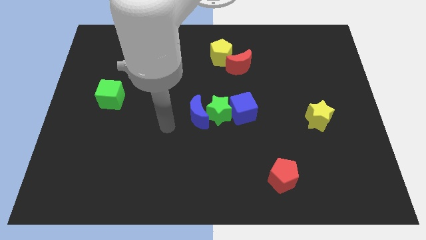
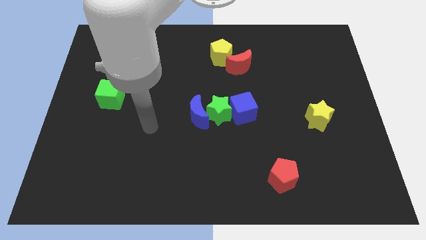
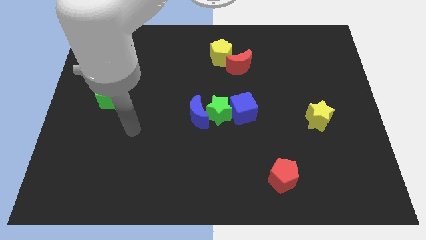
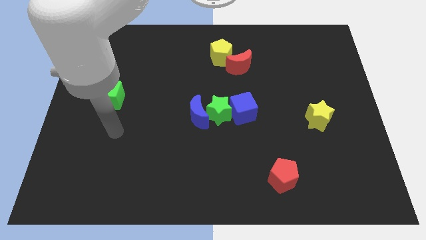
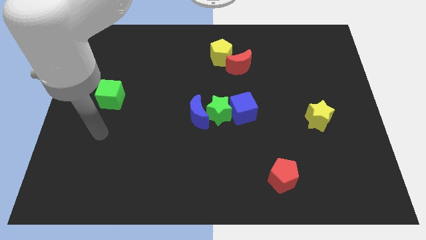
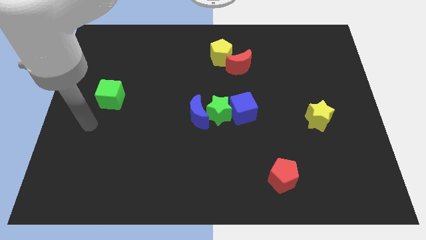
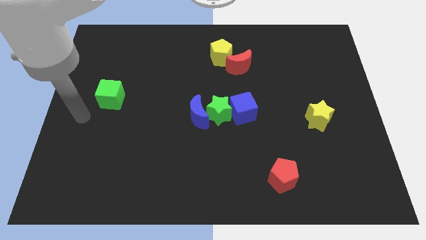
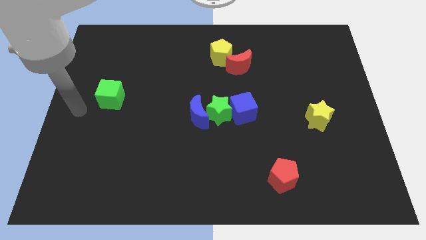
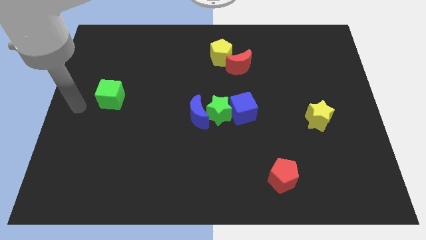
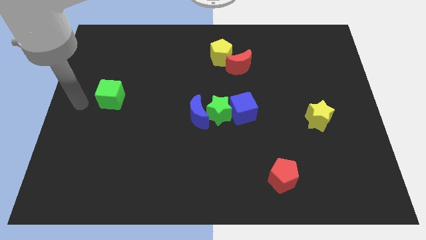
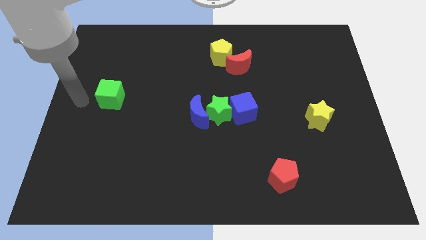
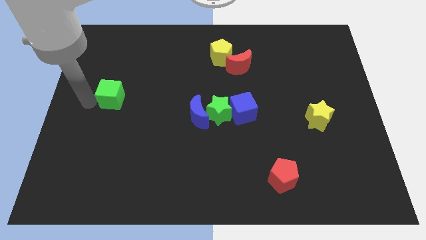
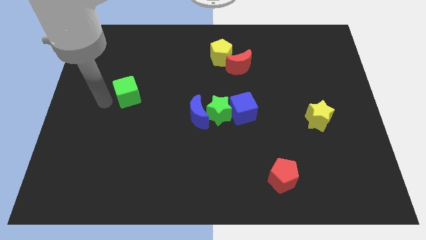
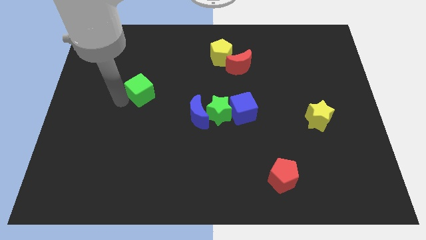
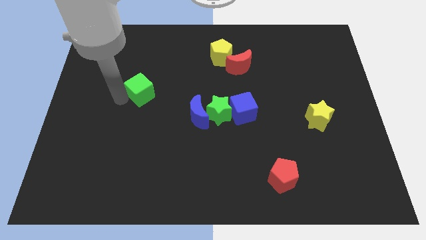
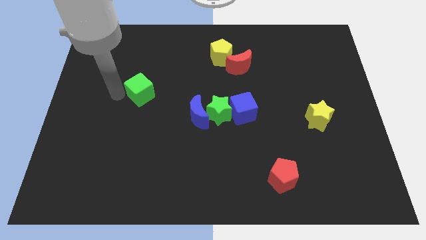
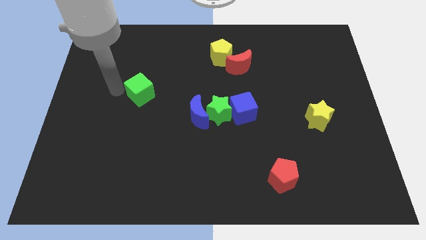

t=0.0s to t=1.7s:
move the green cube towards the blue moon

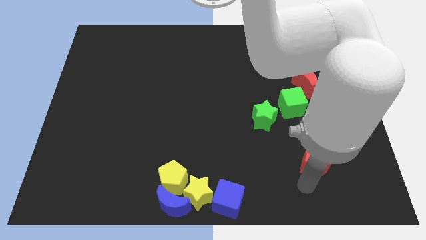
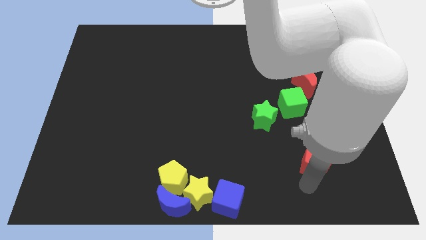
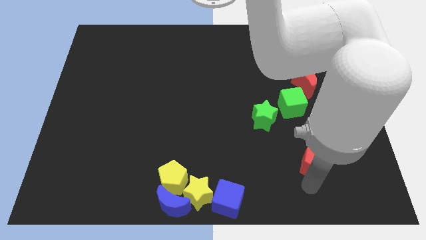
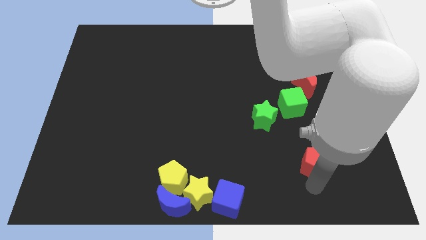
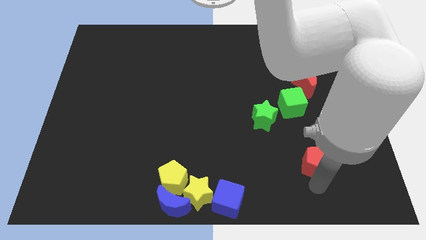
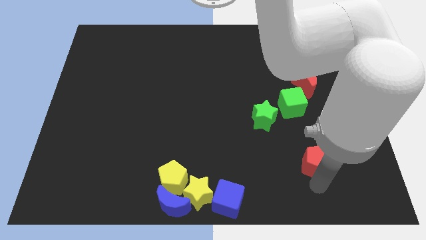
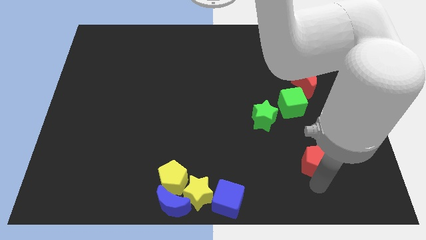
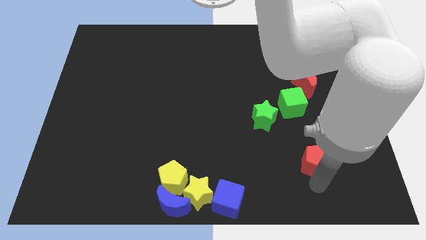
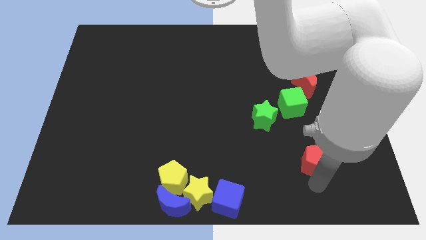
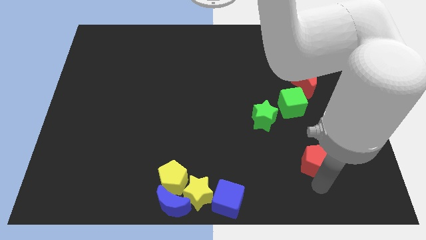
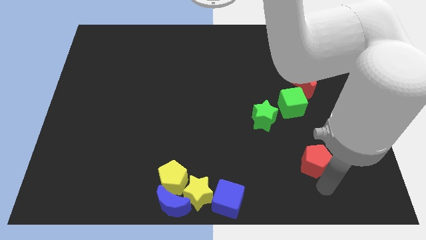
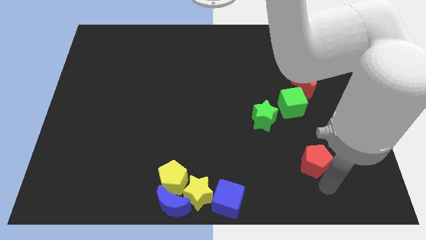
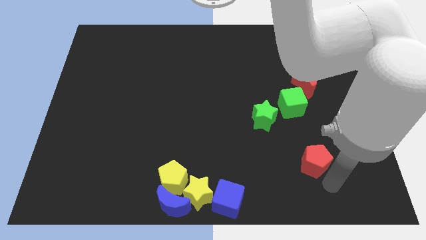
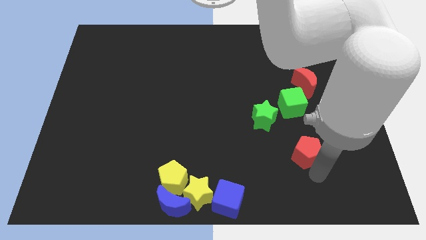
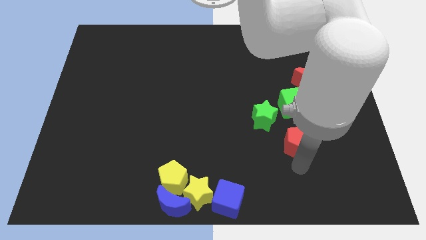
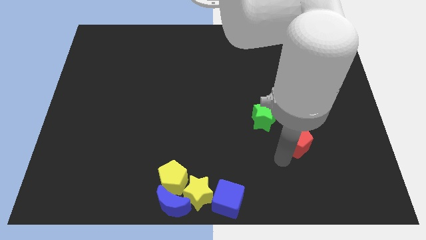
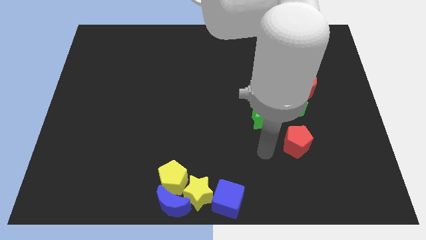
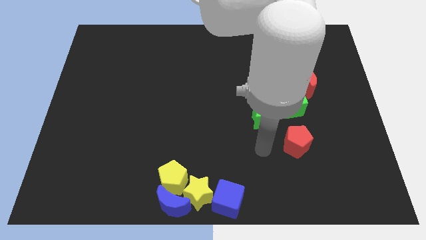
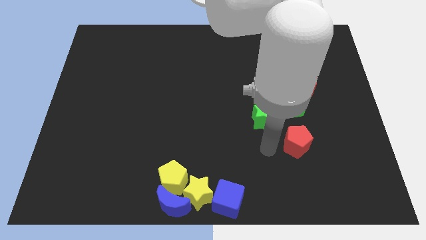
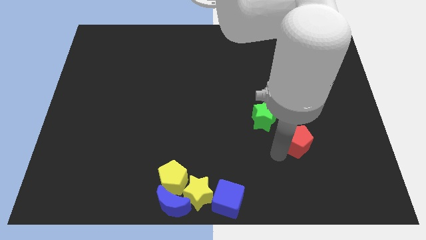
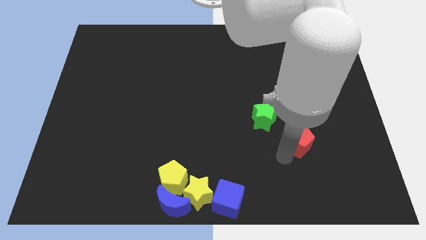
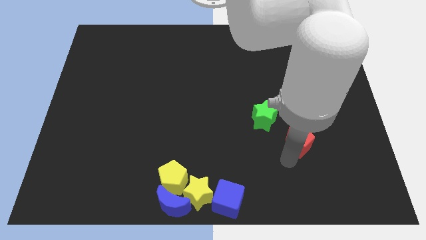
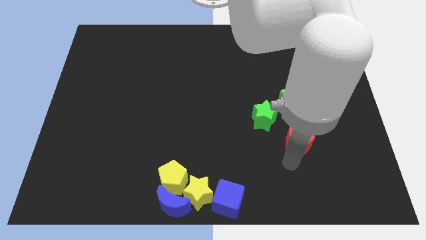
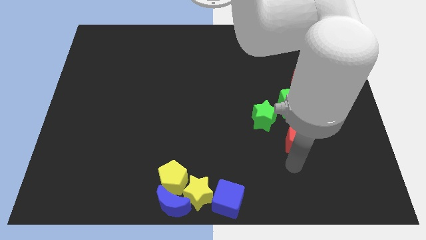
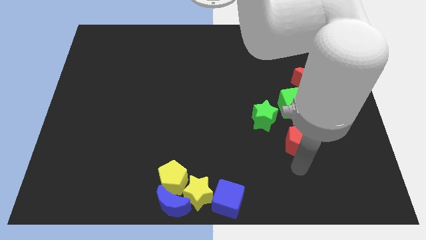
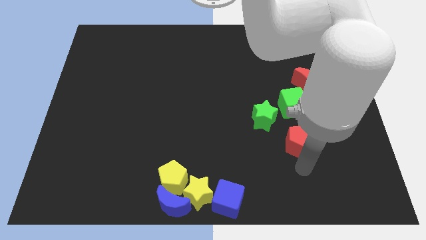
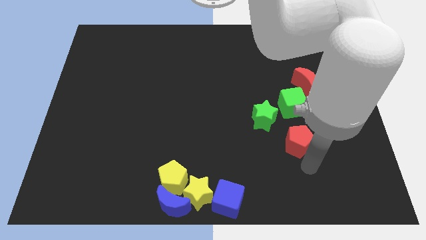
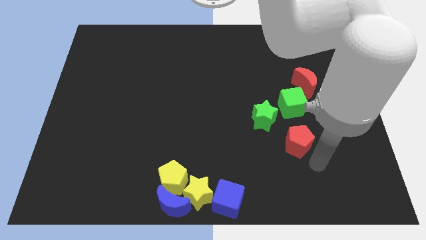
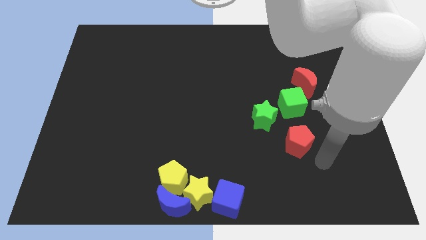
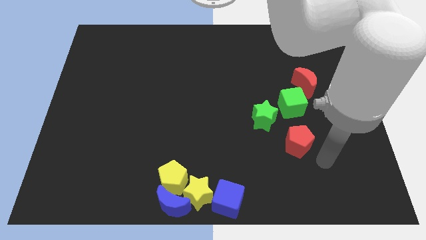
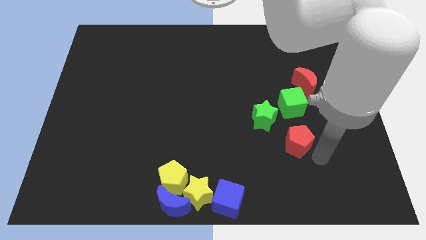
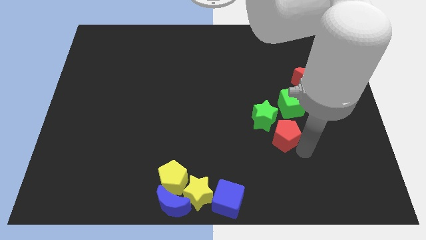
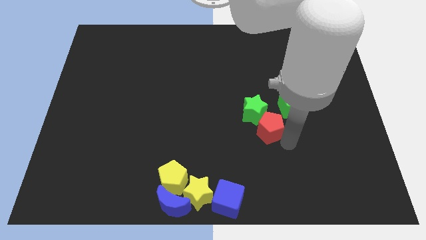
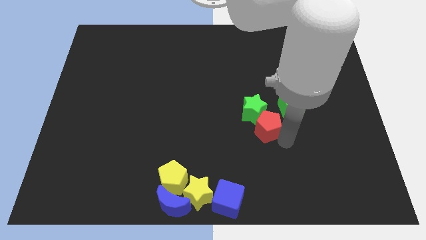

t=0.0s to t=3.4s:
push red pentagon into the green star

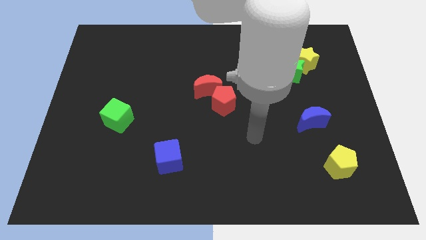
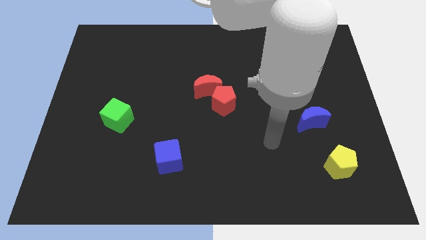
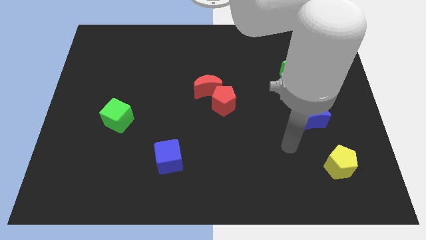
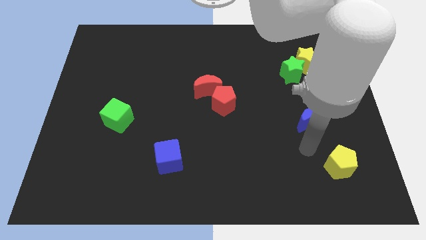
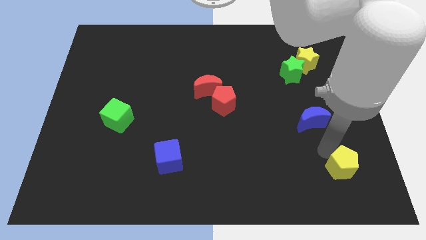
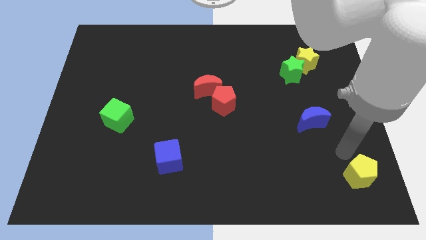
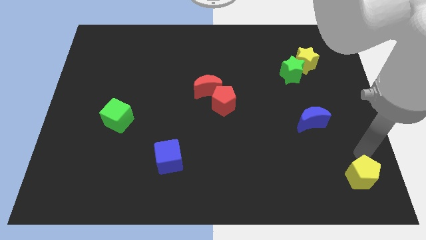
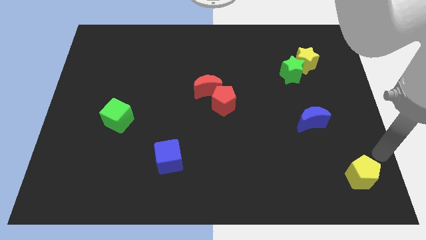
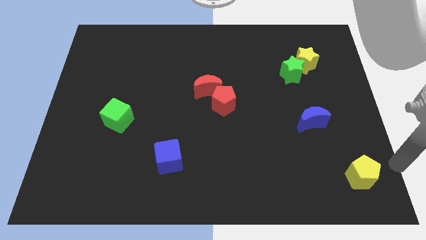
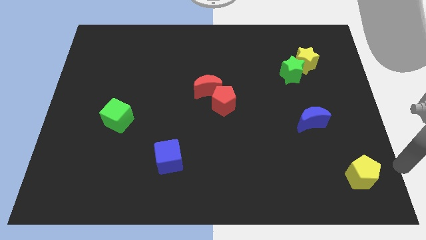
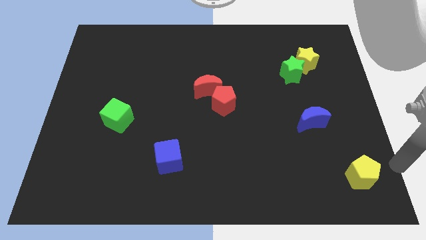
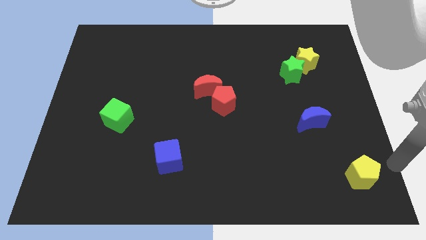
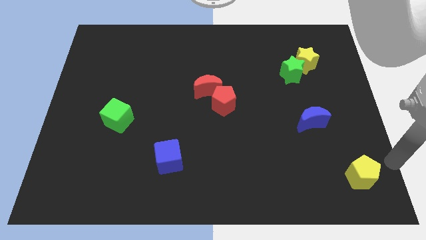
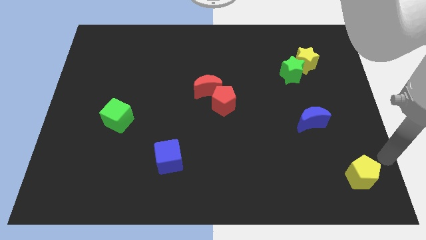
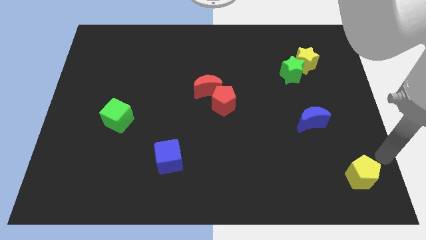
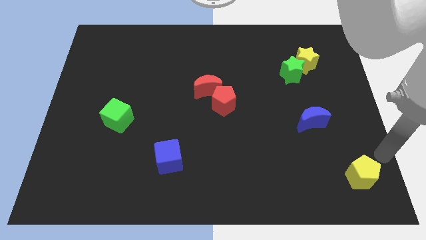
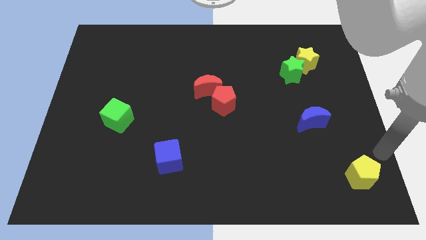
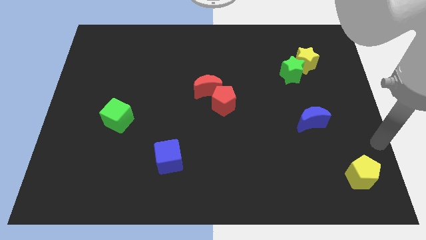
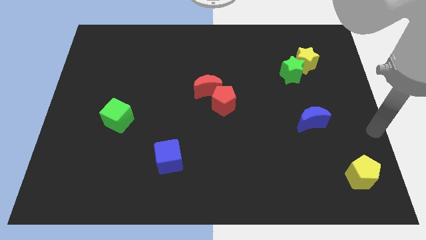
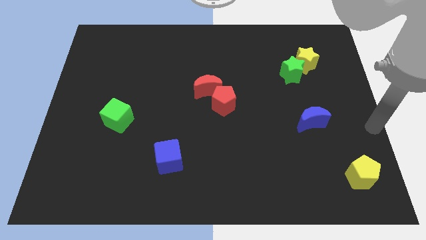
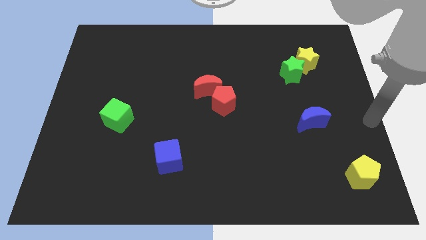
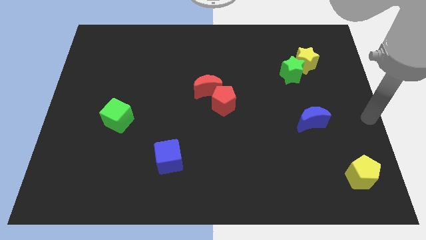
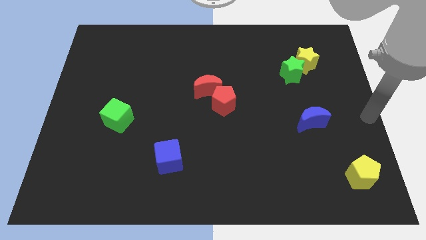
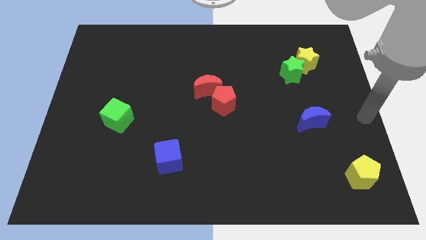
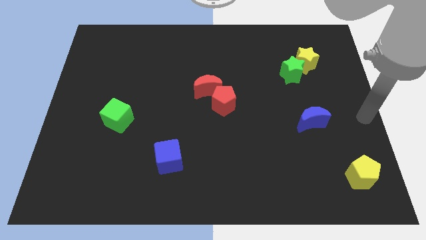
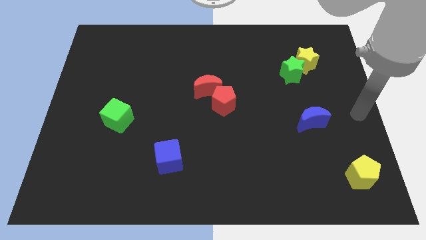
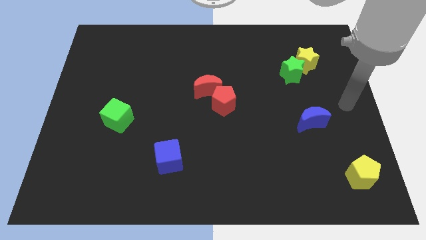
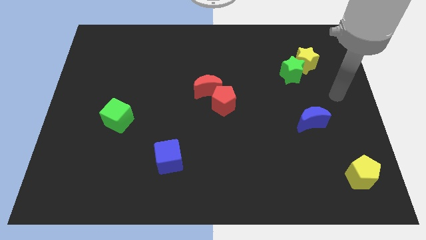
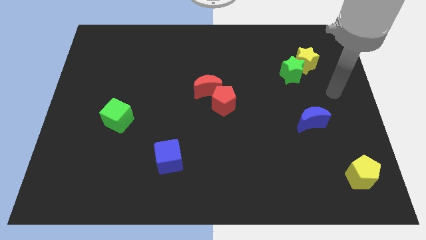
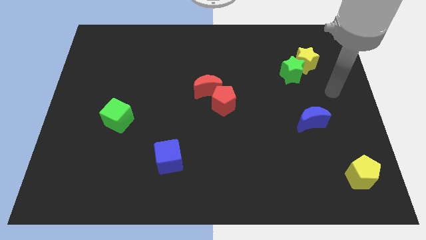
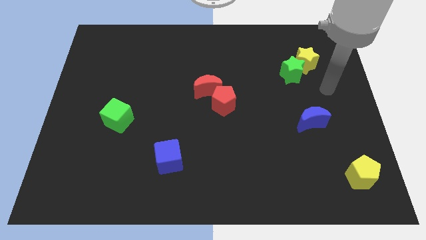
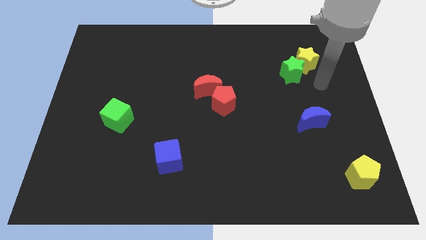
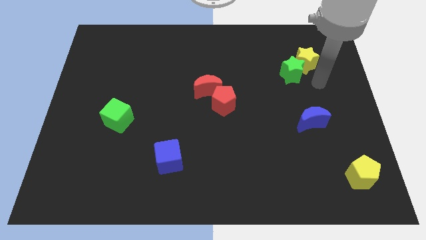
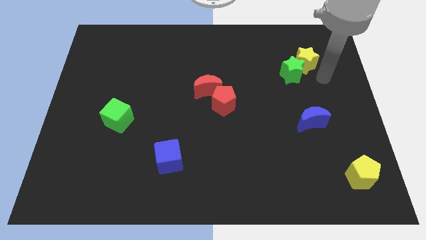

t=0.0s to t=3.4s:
move yellow pentagon slightly to the right

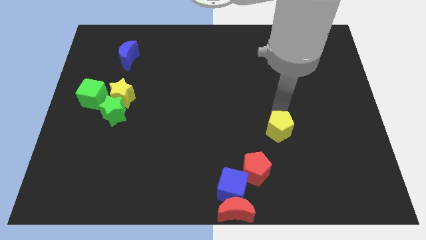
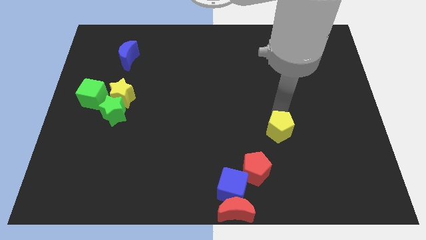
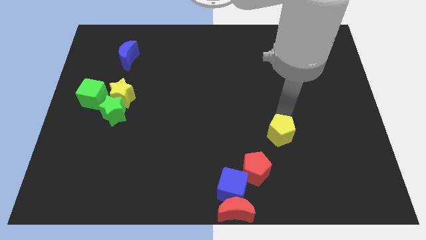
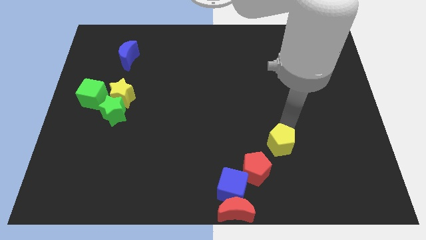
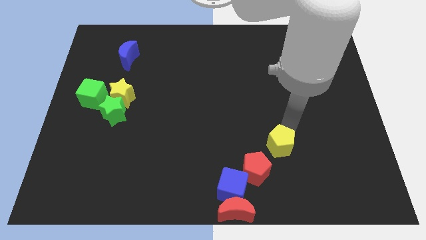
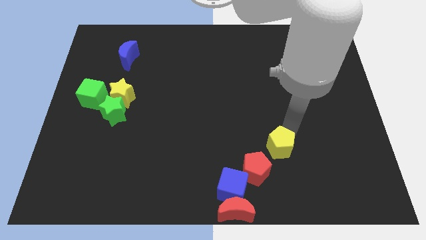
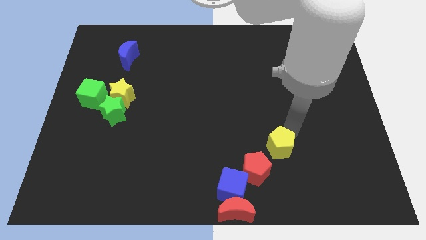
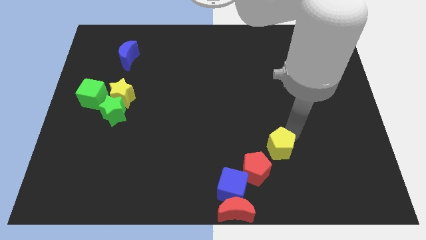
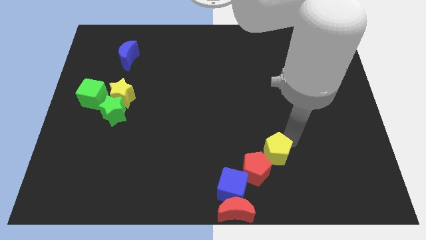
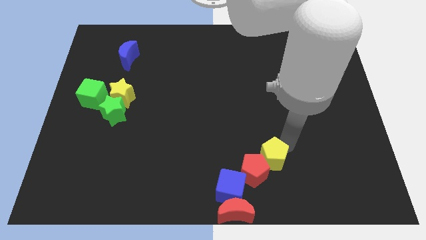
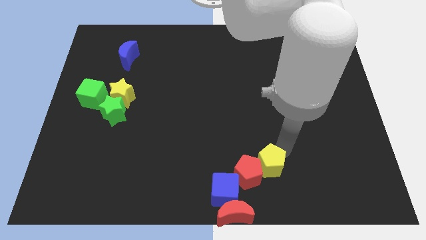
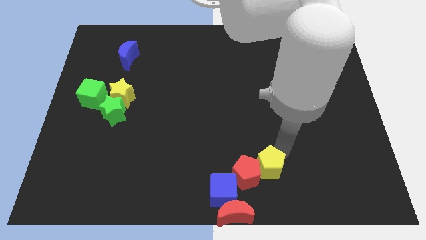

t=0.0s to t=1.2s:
push the yellow pentagon into the red pentagon
